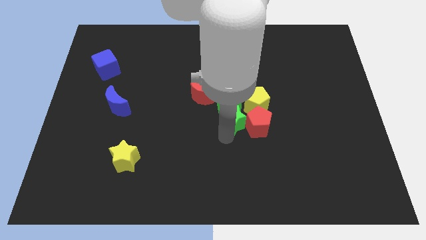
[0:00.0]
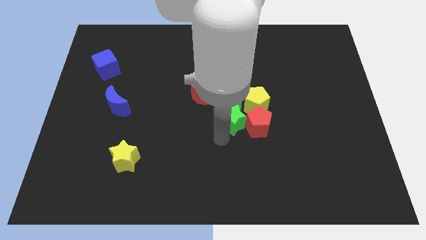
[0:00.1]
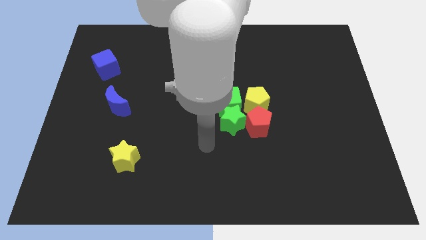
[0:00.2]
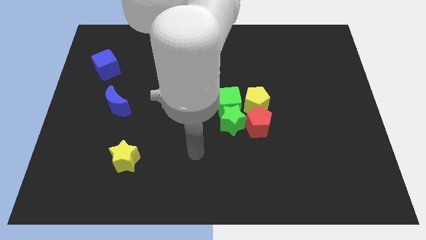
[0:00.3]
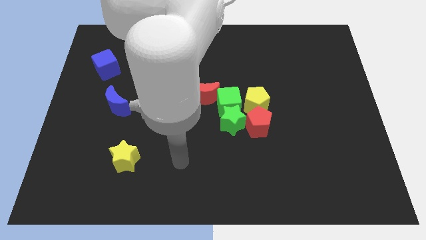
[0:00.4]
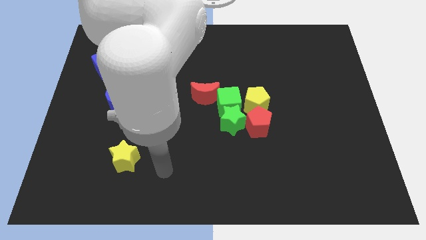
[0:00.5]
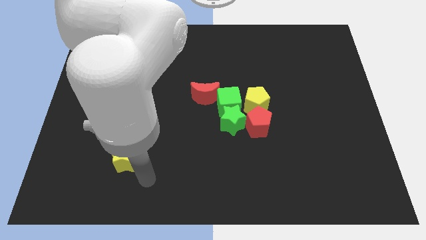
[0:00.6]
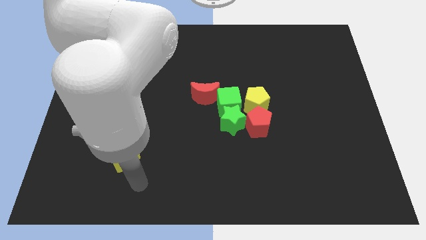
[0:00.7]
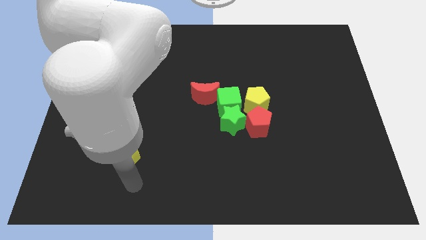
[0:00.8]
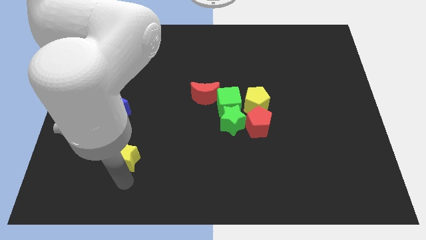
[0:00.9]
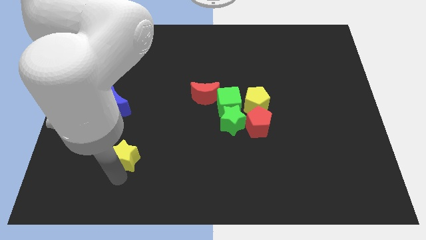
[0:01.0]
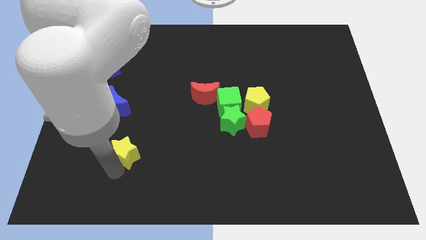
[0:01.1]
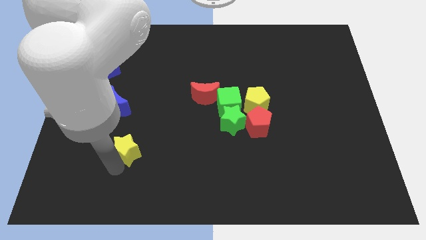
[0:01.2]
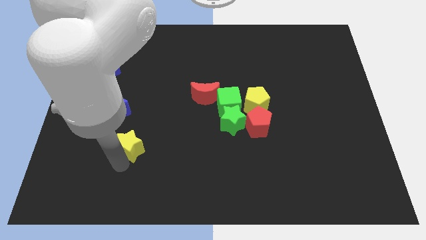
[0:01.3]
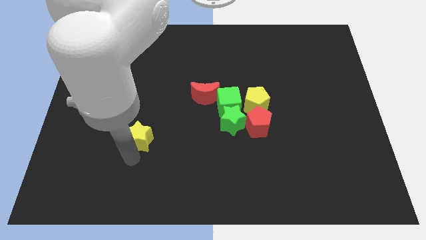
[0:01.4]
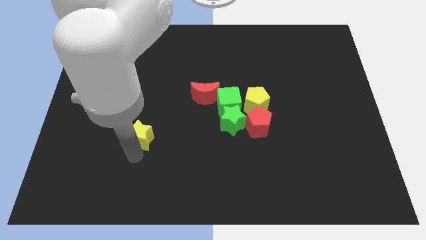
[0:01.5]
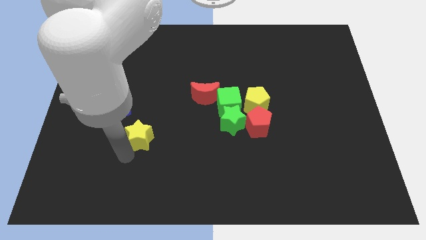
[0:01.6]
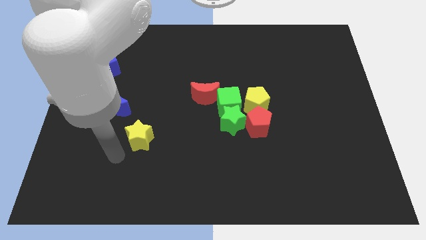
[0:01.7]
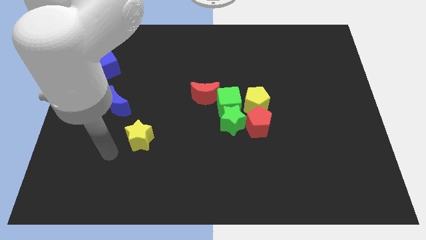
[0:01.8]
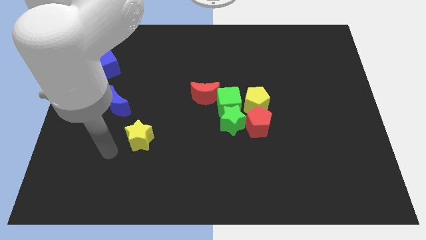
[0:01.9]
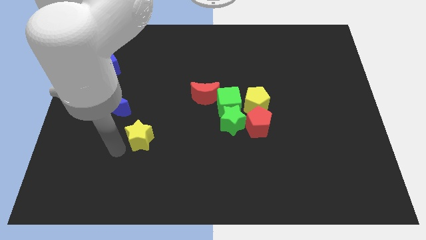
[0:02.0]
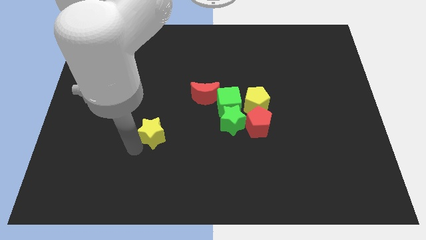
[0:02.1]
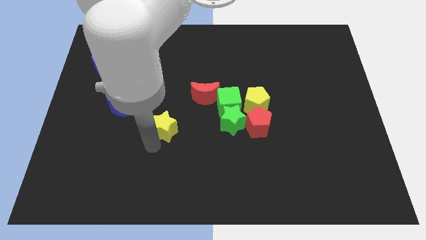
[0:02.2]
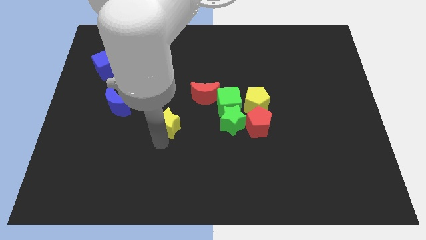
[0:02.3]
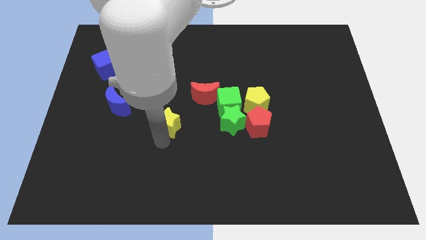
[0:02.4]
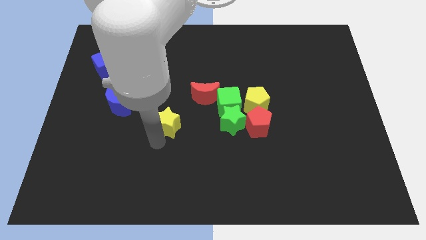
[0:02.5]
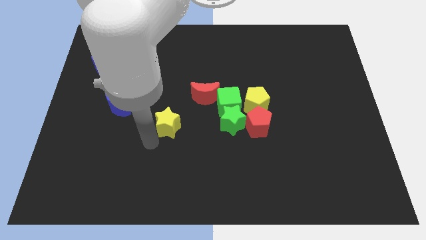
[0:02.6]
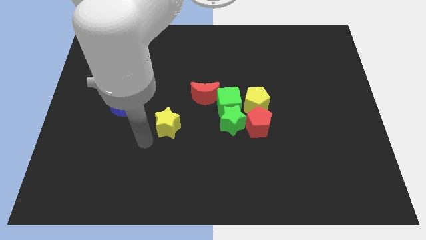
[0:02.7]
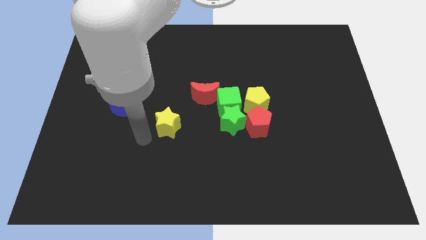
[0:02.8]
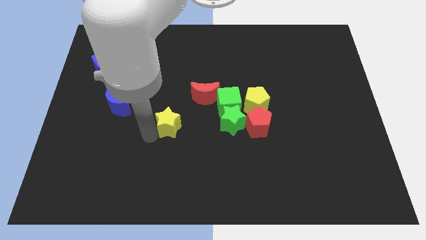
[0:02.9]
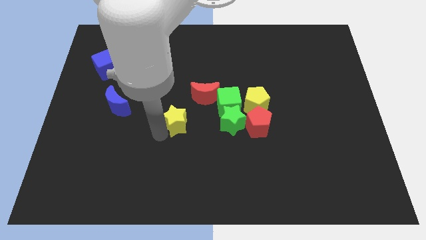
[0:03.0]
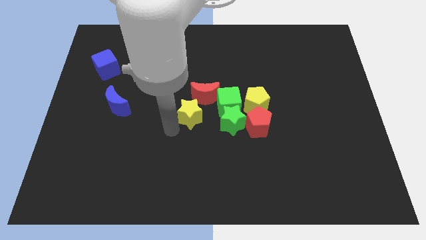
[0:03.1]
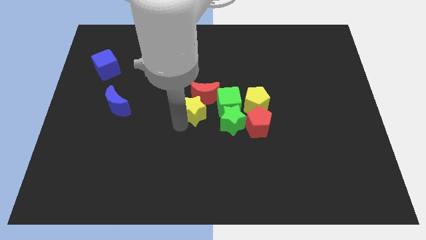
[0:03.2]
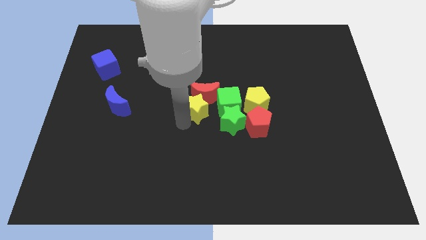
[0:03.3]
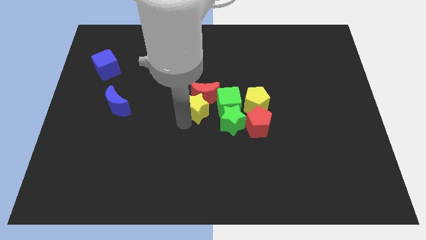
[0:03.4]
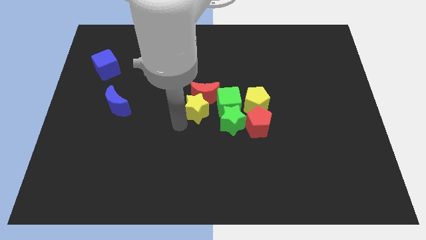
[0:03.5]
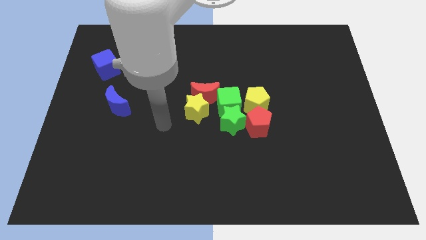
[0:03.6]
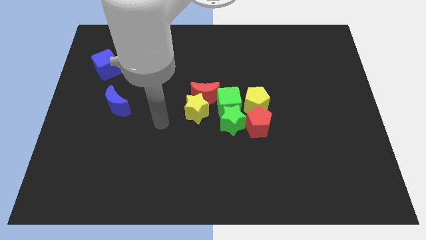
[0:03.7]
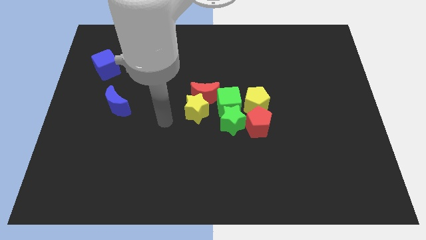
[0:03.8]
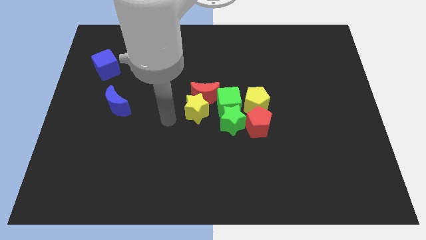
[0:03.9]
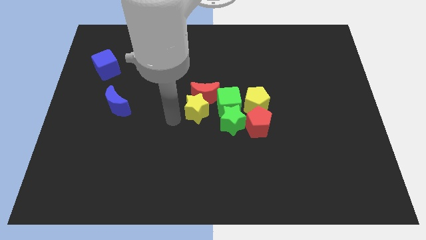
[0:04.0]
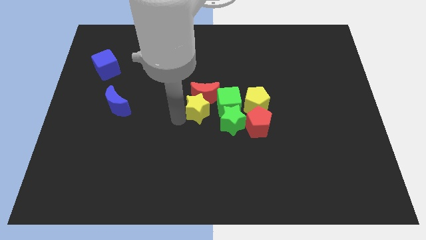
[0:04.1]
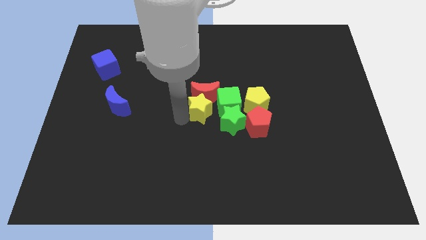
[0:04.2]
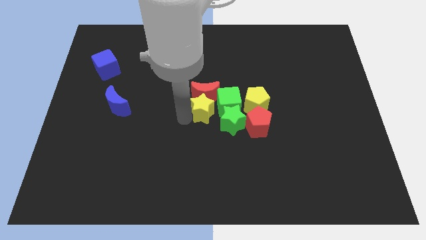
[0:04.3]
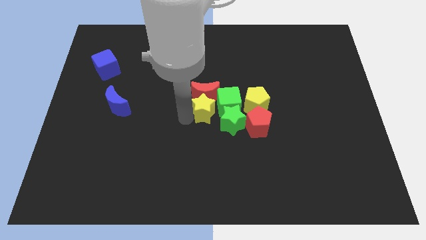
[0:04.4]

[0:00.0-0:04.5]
push the yellow star into red crescent

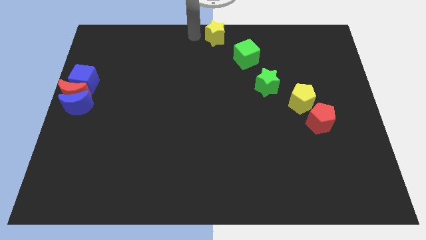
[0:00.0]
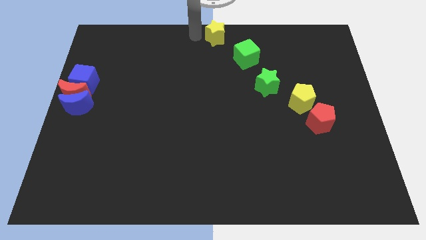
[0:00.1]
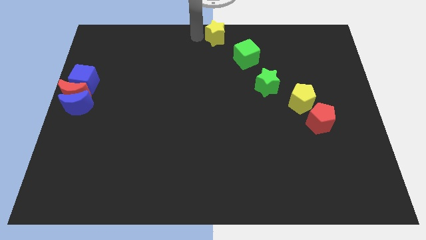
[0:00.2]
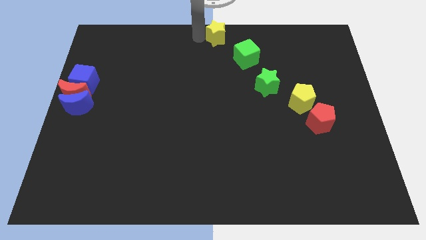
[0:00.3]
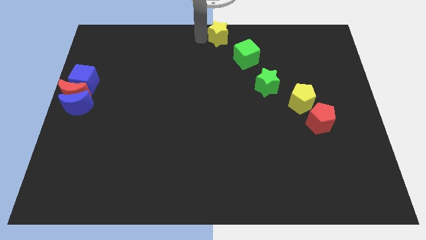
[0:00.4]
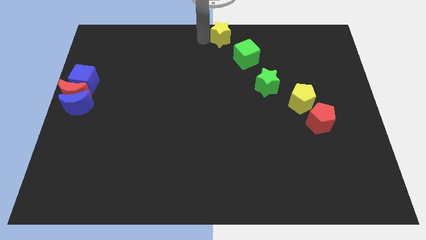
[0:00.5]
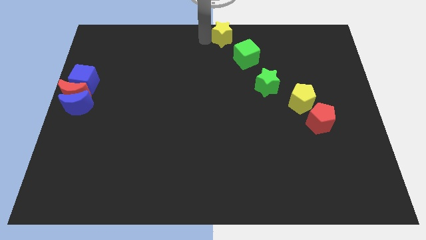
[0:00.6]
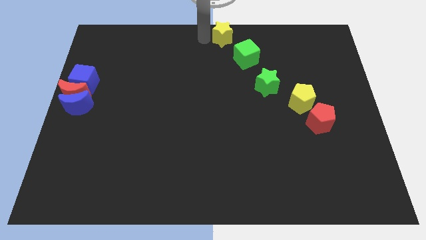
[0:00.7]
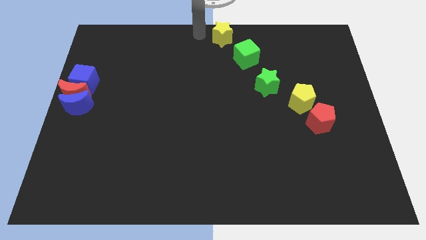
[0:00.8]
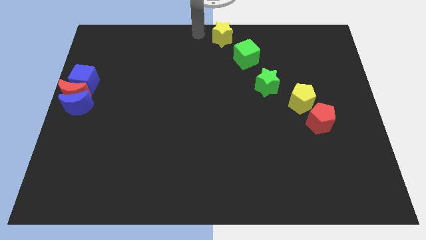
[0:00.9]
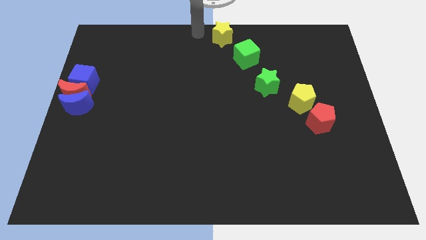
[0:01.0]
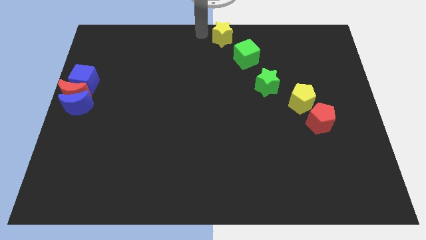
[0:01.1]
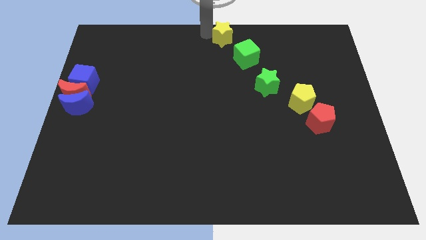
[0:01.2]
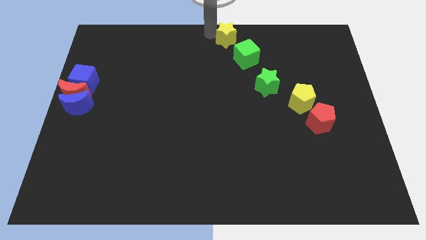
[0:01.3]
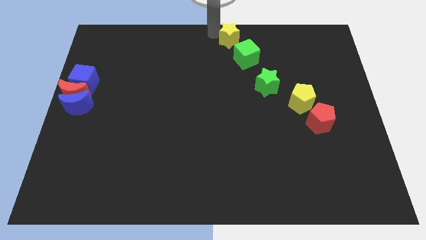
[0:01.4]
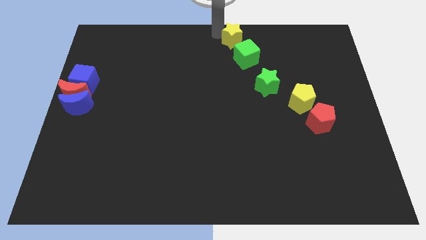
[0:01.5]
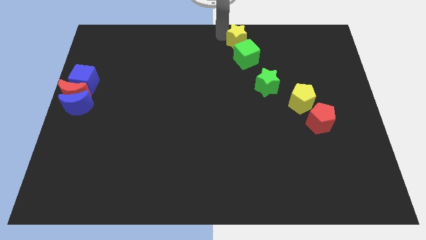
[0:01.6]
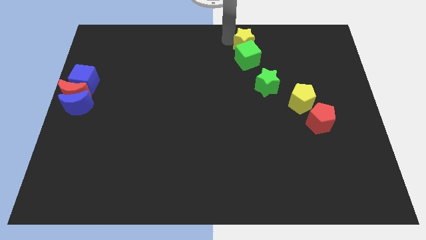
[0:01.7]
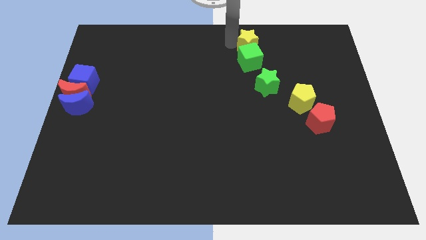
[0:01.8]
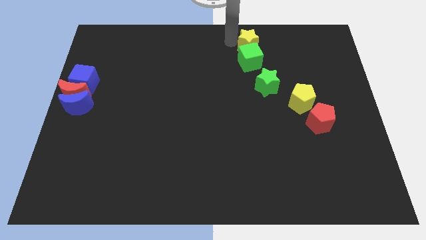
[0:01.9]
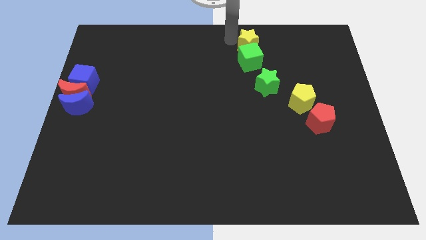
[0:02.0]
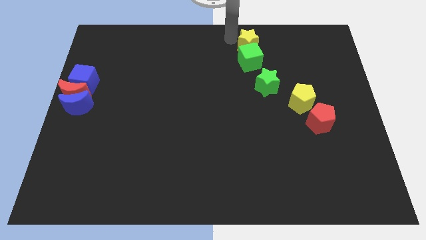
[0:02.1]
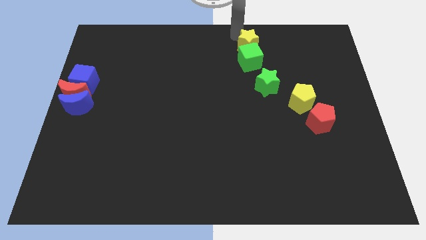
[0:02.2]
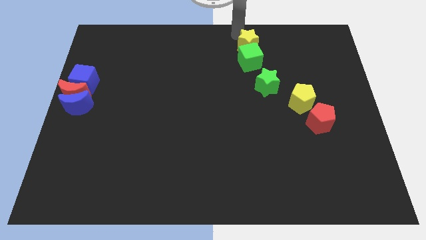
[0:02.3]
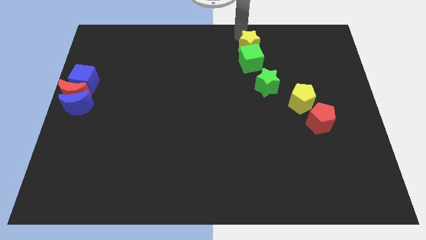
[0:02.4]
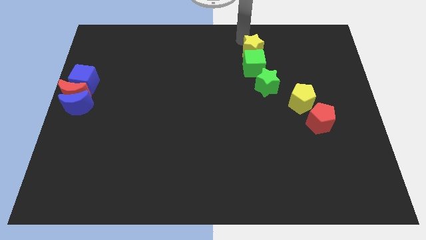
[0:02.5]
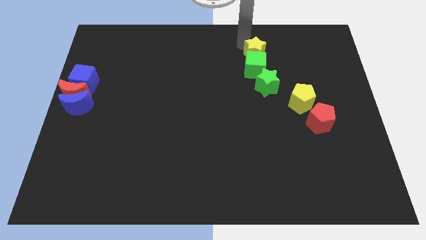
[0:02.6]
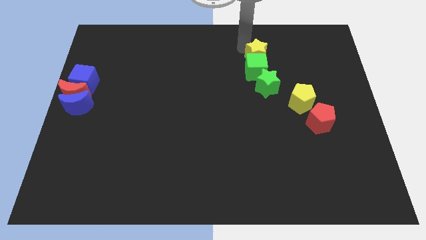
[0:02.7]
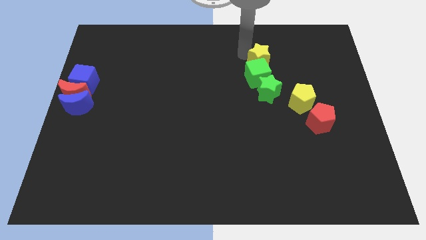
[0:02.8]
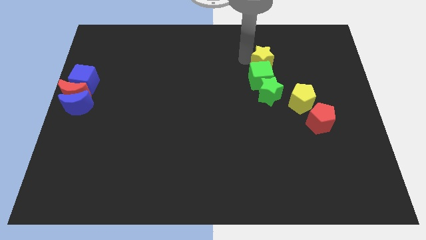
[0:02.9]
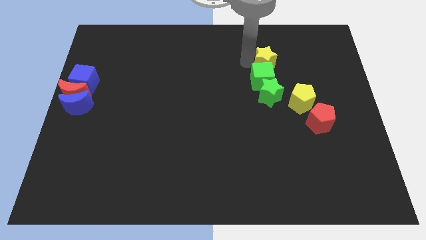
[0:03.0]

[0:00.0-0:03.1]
push the yellow star towards the right to form a vertical line above green cube

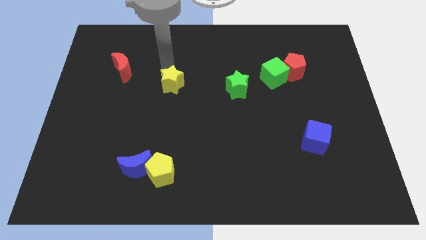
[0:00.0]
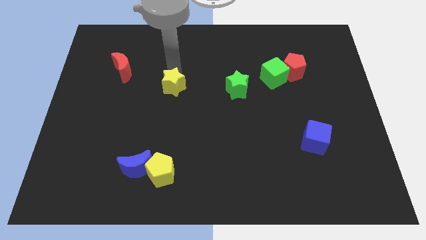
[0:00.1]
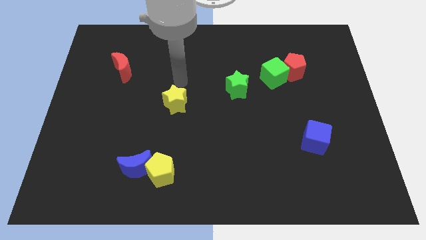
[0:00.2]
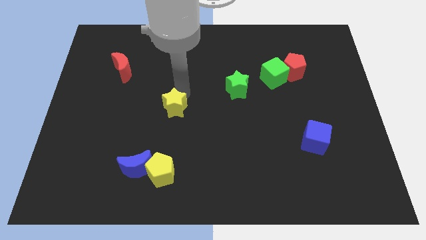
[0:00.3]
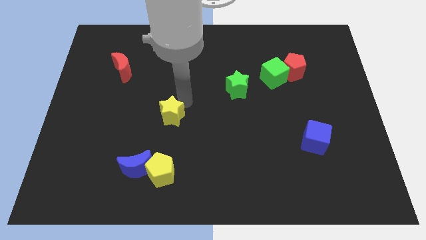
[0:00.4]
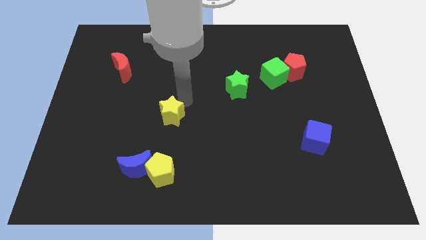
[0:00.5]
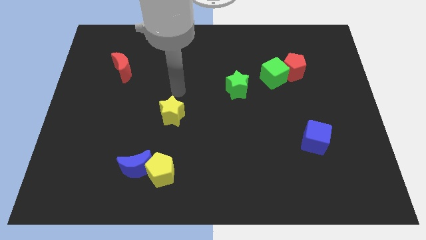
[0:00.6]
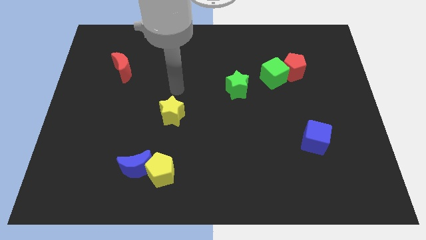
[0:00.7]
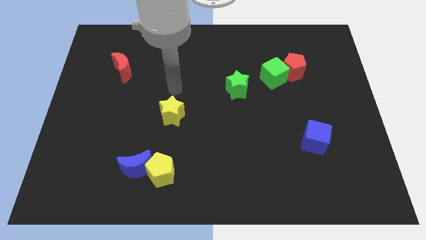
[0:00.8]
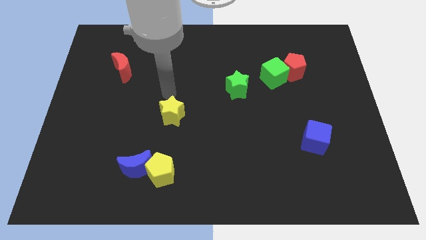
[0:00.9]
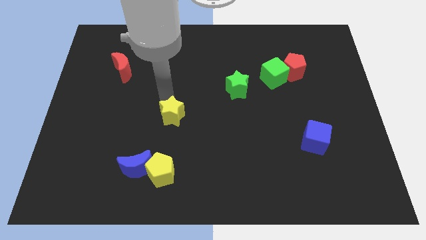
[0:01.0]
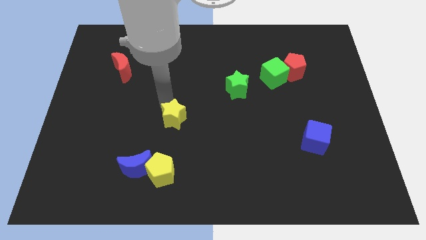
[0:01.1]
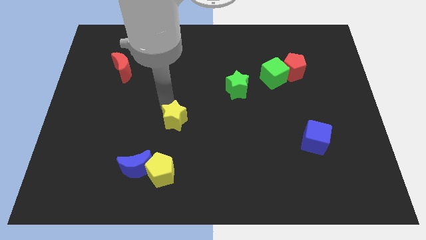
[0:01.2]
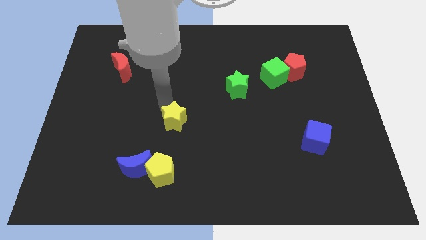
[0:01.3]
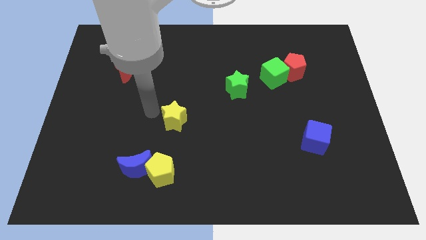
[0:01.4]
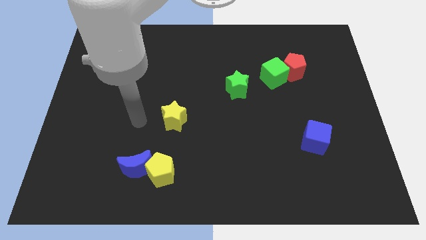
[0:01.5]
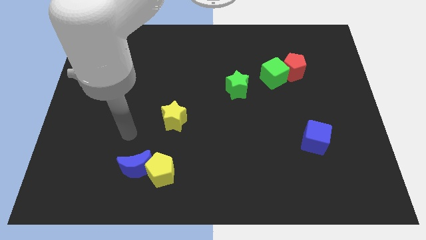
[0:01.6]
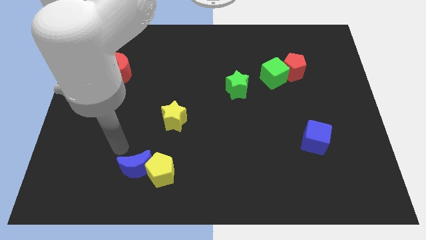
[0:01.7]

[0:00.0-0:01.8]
move the yellow star slightly towards center left of the board
